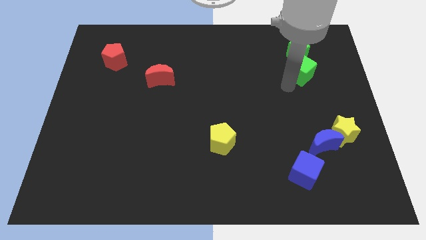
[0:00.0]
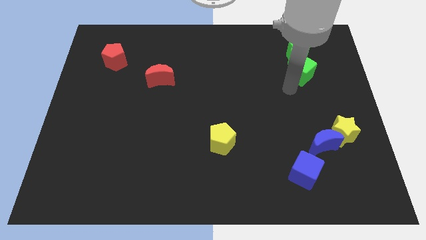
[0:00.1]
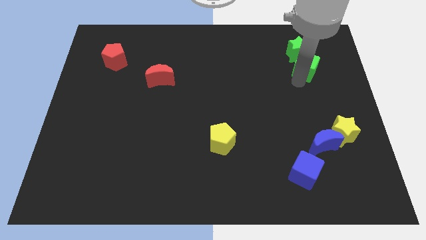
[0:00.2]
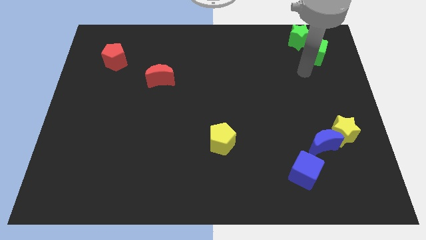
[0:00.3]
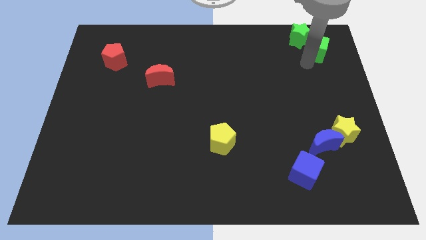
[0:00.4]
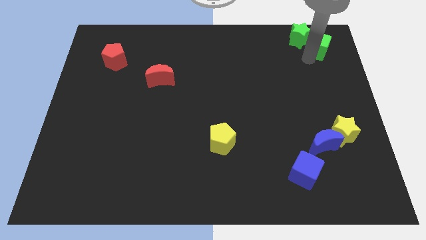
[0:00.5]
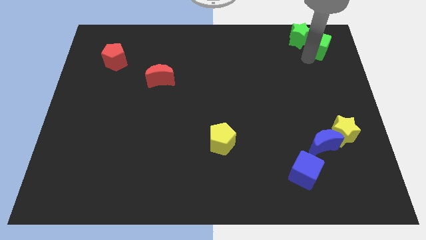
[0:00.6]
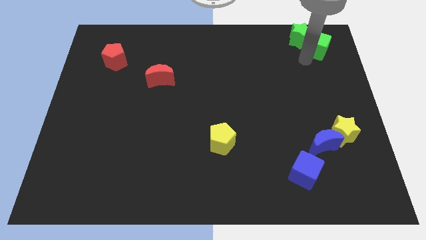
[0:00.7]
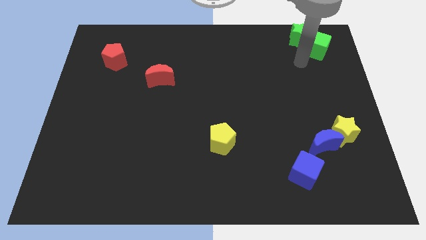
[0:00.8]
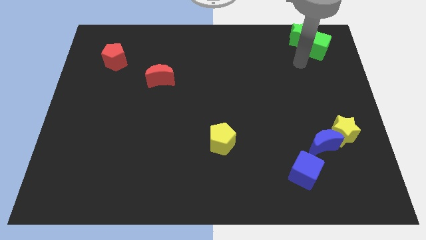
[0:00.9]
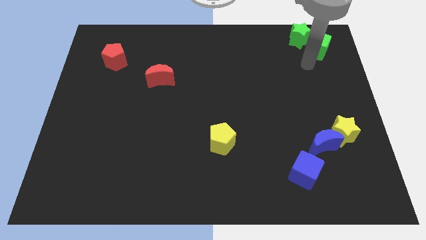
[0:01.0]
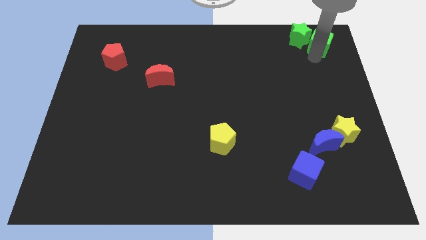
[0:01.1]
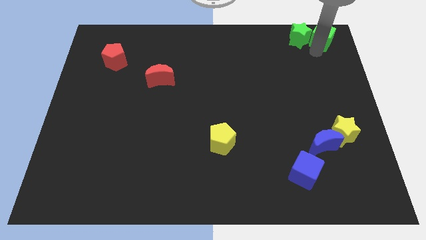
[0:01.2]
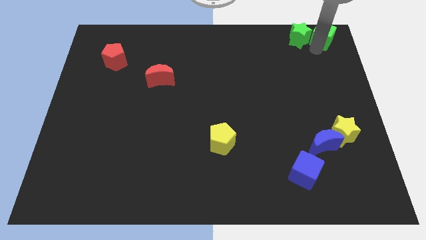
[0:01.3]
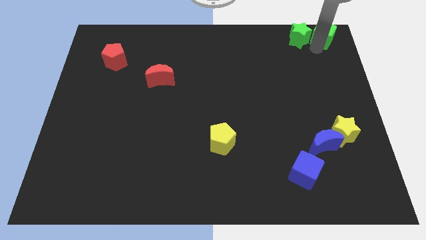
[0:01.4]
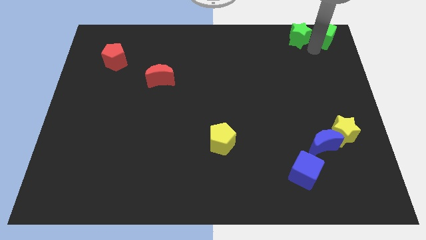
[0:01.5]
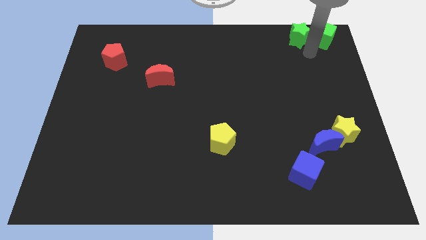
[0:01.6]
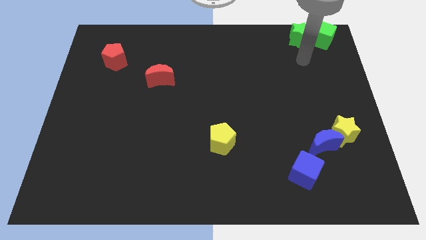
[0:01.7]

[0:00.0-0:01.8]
place the green cube right to the green star

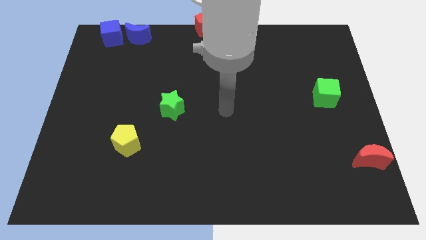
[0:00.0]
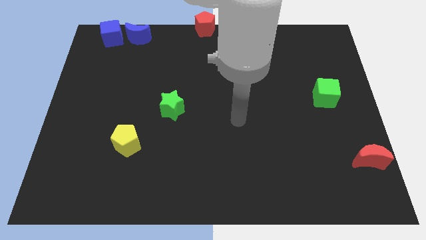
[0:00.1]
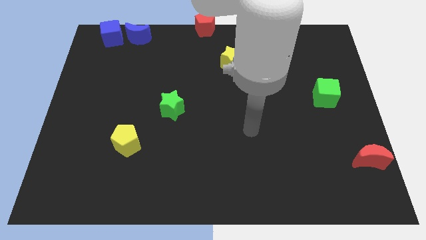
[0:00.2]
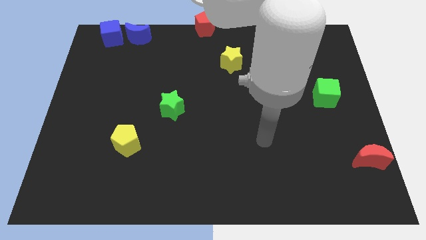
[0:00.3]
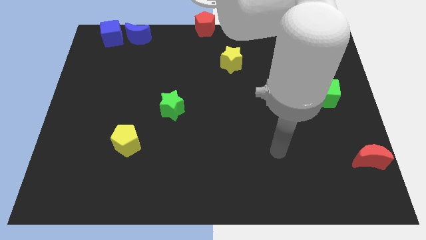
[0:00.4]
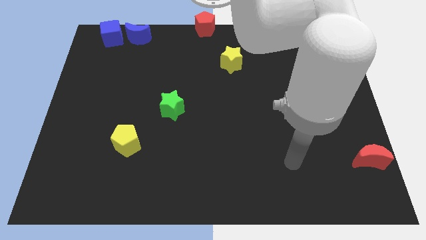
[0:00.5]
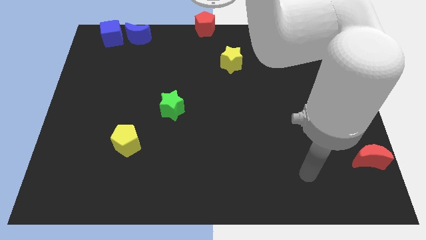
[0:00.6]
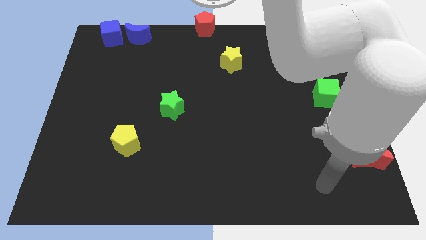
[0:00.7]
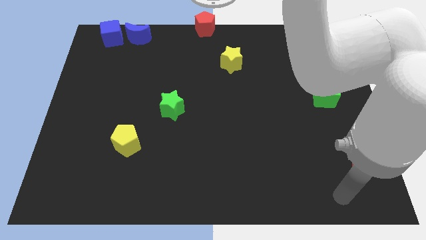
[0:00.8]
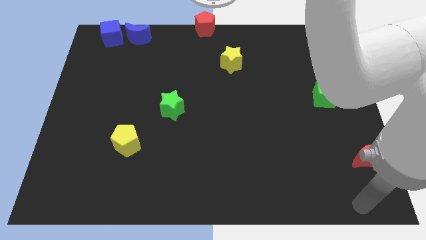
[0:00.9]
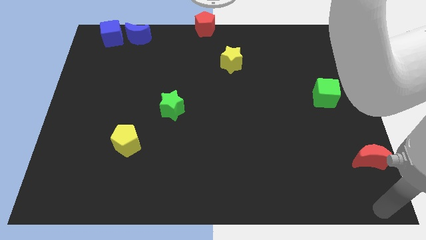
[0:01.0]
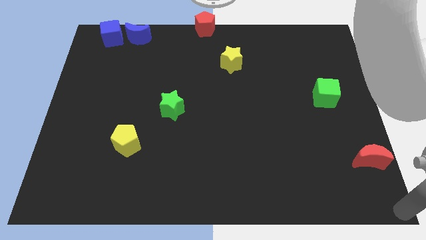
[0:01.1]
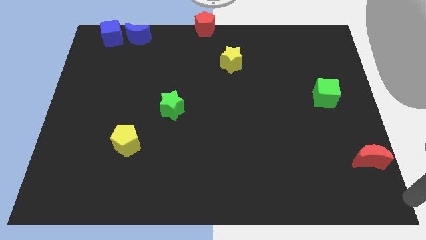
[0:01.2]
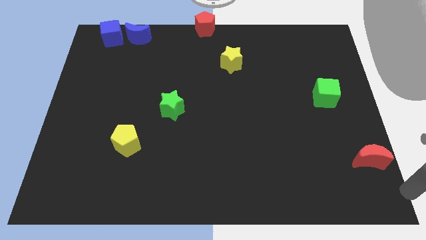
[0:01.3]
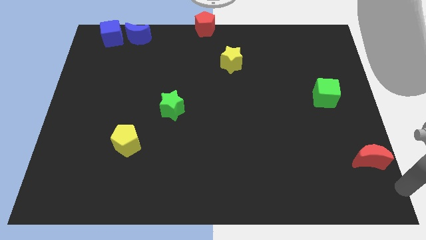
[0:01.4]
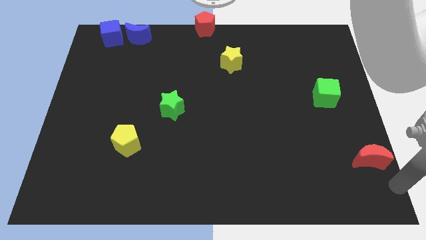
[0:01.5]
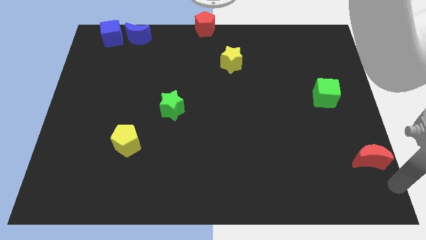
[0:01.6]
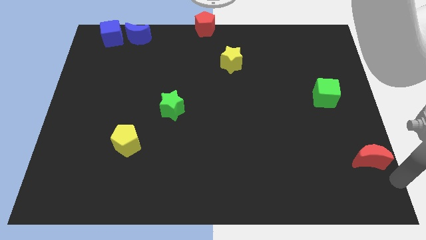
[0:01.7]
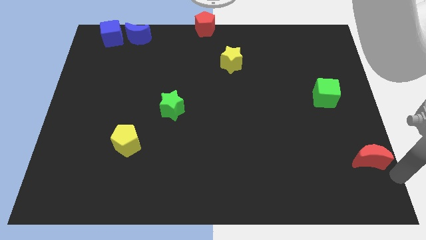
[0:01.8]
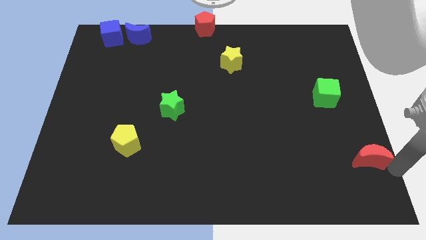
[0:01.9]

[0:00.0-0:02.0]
move your arm towards the red crescent

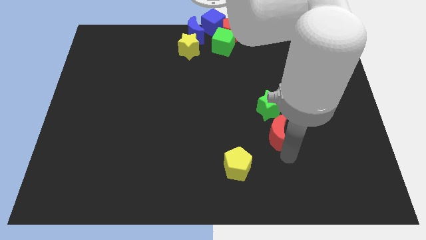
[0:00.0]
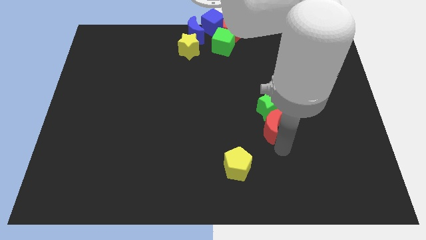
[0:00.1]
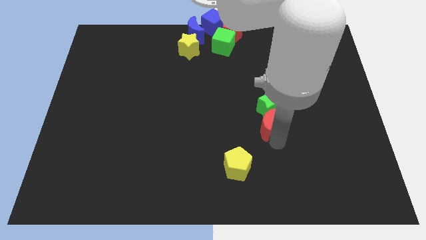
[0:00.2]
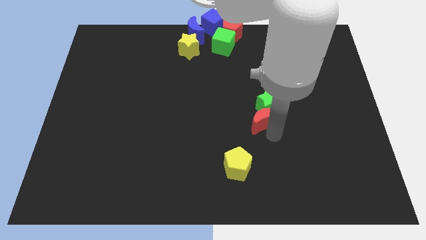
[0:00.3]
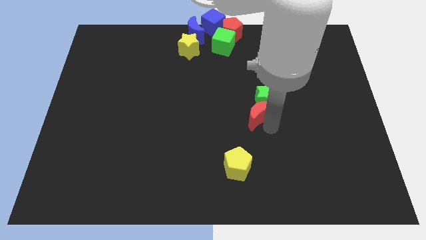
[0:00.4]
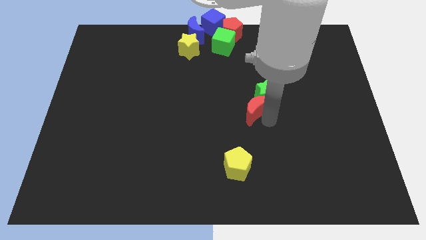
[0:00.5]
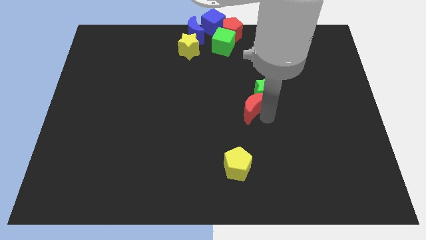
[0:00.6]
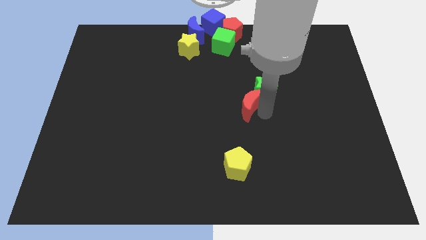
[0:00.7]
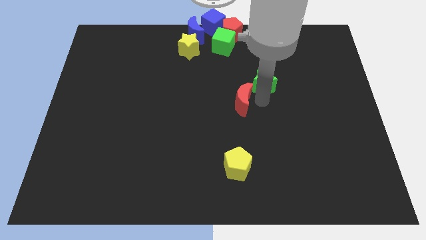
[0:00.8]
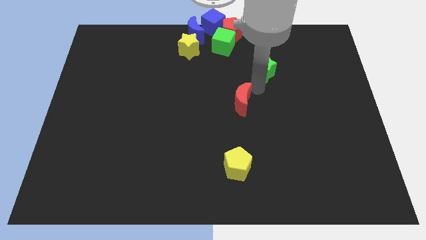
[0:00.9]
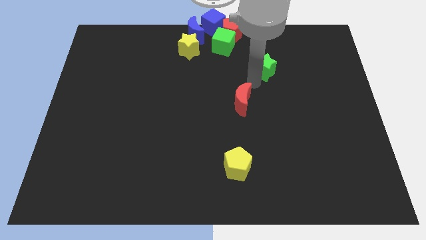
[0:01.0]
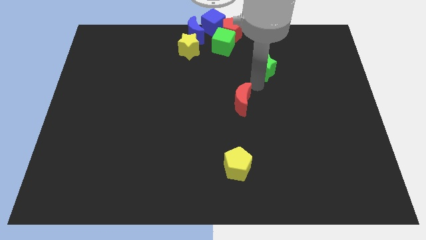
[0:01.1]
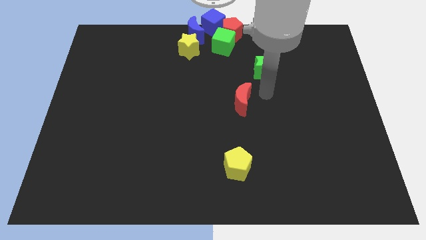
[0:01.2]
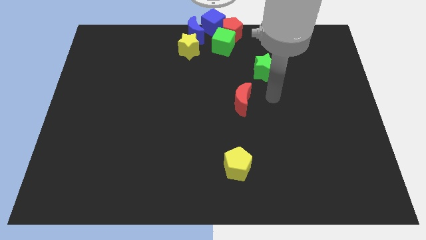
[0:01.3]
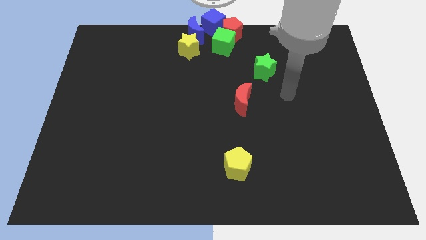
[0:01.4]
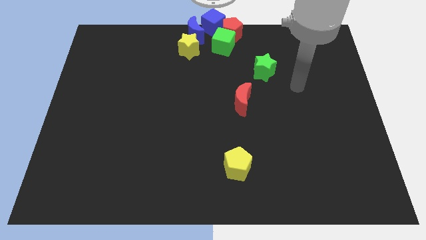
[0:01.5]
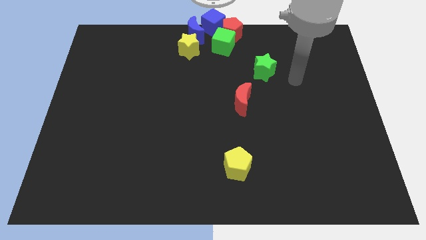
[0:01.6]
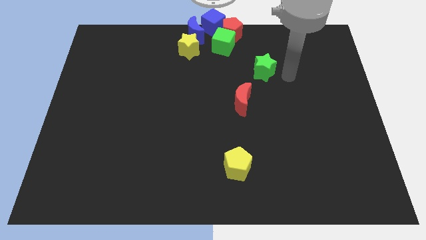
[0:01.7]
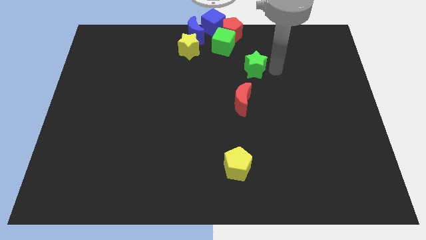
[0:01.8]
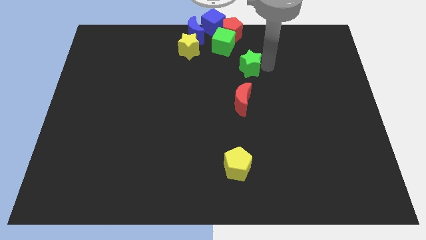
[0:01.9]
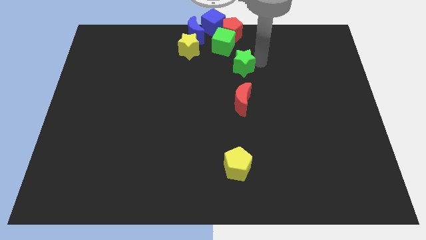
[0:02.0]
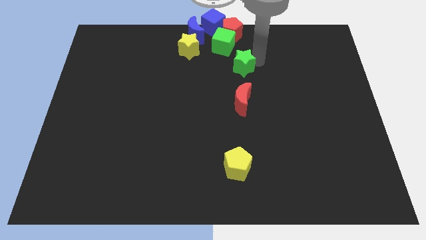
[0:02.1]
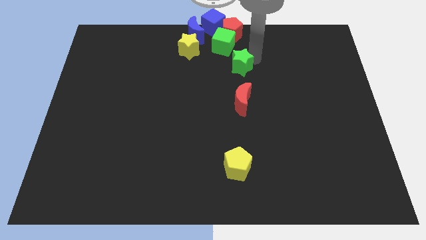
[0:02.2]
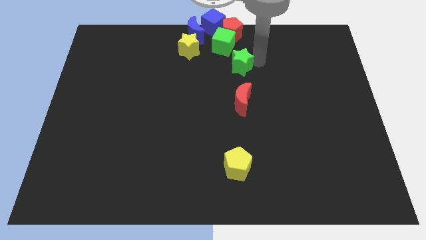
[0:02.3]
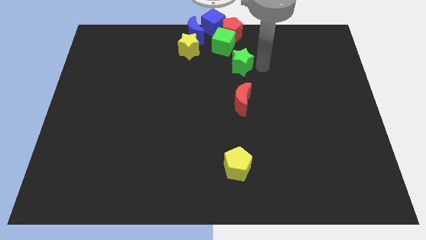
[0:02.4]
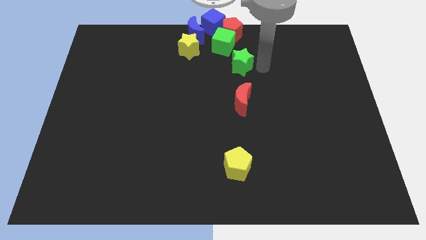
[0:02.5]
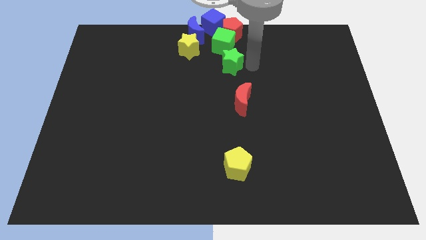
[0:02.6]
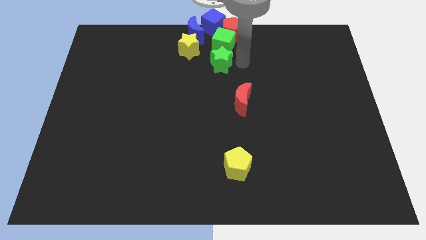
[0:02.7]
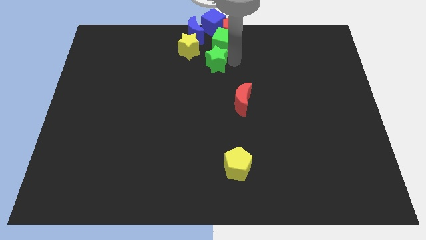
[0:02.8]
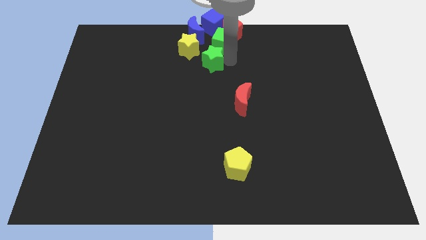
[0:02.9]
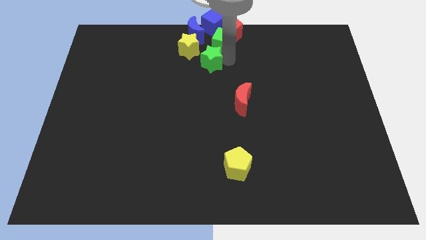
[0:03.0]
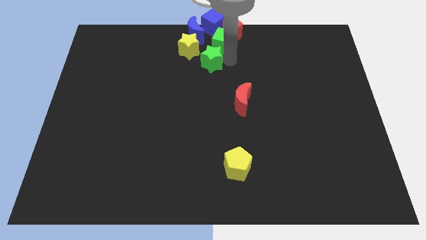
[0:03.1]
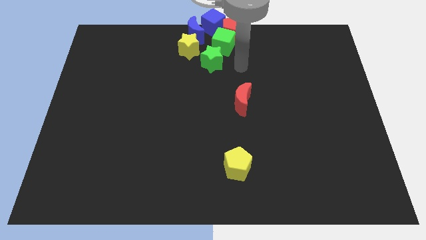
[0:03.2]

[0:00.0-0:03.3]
move the green star to the bottom side of the green cube

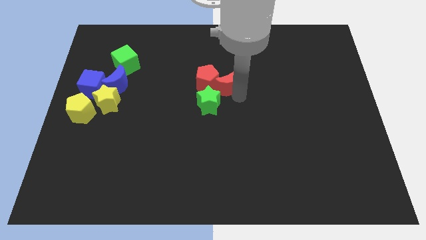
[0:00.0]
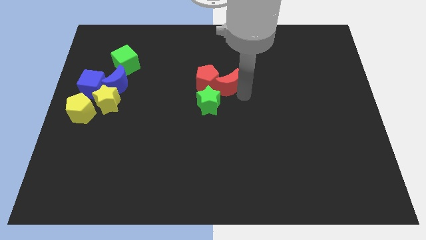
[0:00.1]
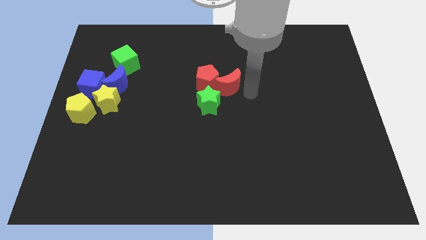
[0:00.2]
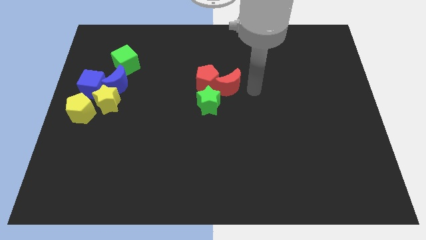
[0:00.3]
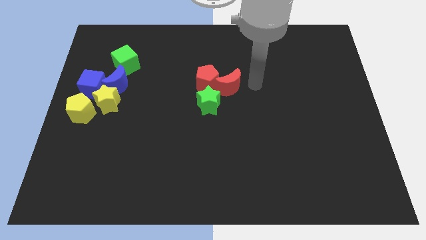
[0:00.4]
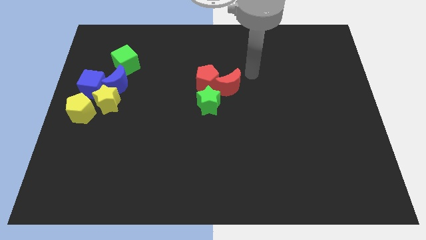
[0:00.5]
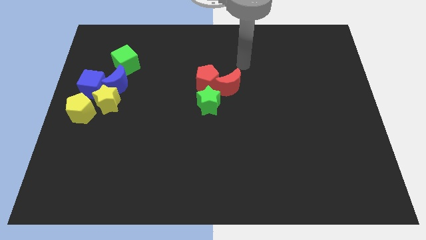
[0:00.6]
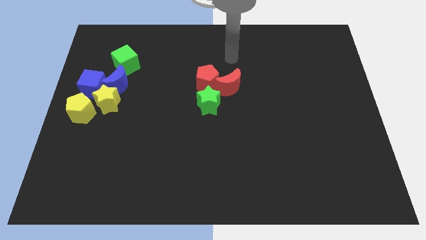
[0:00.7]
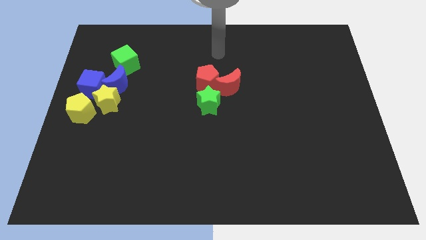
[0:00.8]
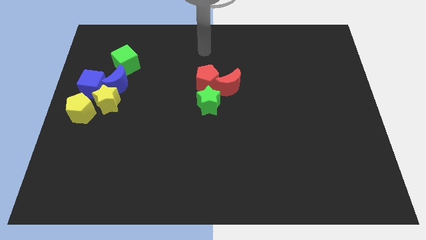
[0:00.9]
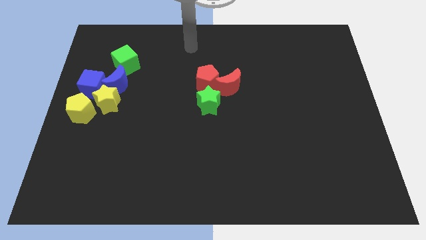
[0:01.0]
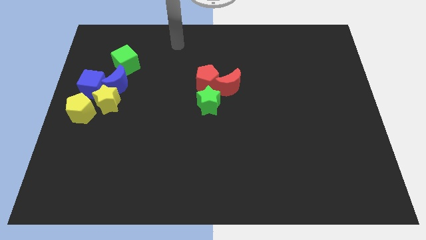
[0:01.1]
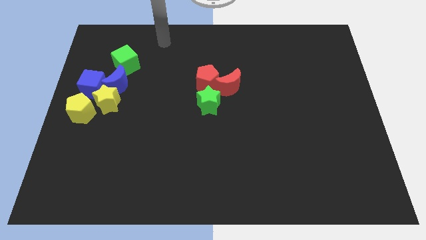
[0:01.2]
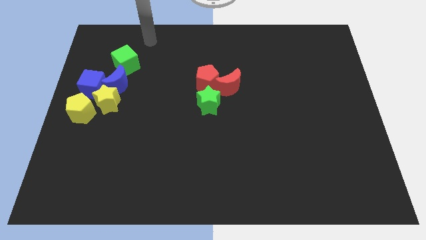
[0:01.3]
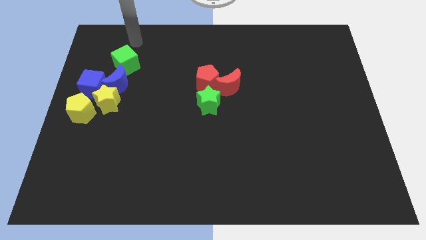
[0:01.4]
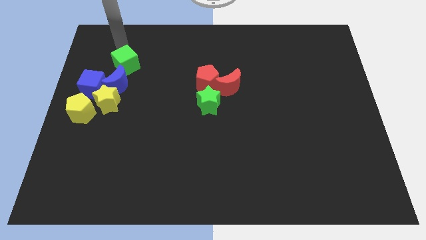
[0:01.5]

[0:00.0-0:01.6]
place the arm above the green cube

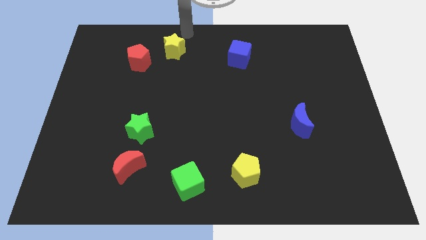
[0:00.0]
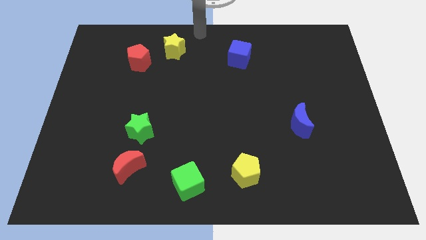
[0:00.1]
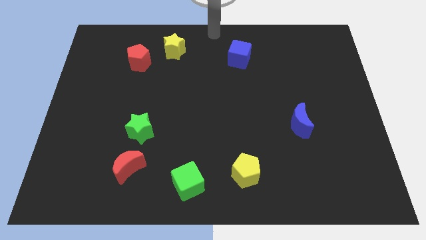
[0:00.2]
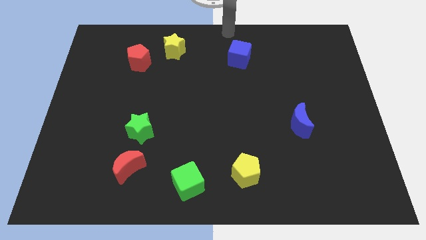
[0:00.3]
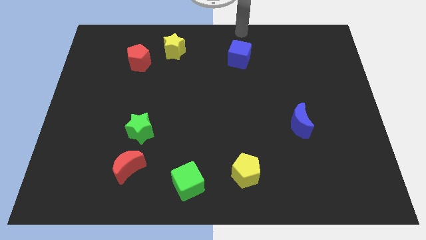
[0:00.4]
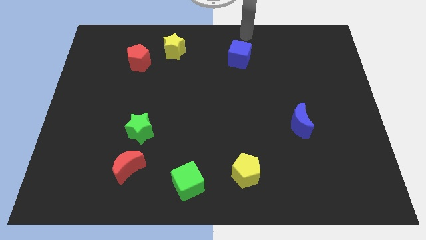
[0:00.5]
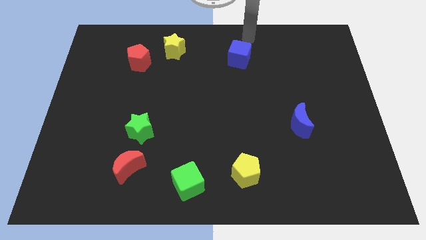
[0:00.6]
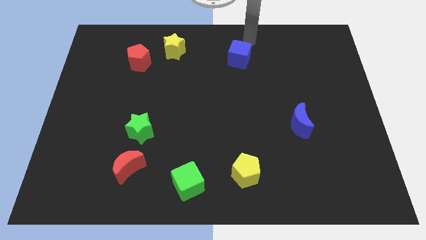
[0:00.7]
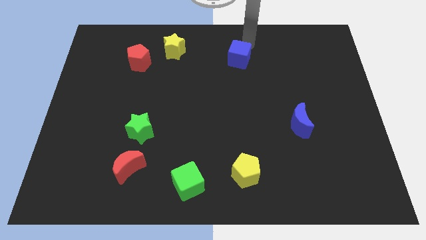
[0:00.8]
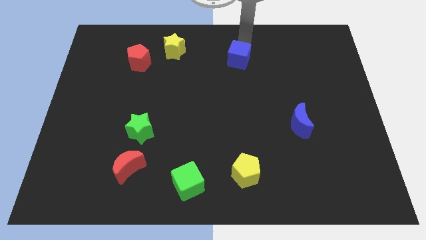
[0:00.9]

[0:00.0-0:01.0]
point your arm at the top of blue cube
